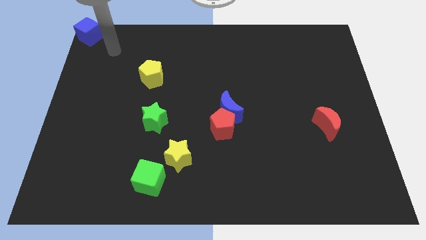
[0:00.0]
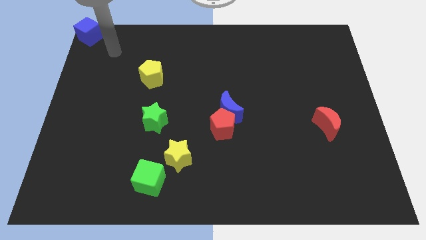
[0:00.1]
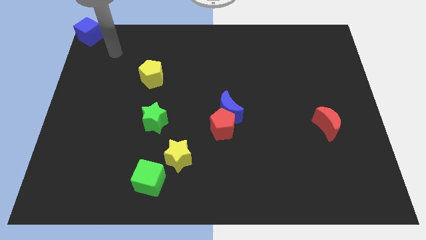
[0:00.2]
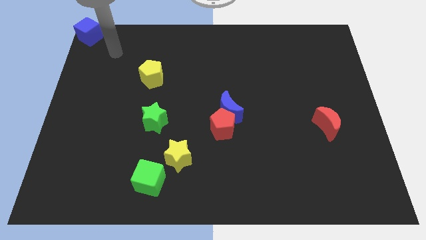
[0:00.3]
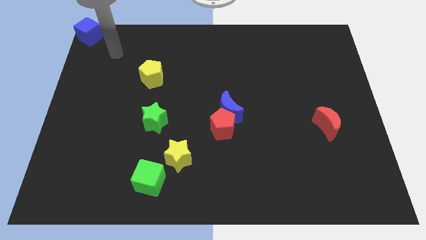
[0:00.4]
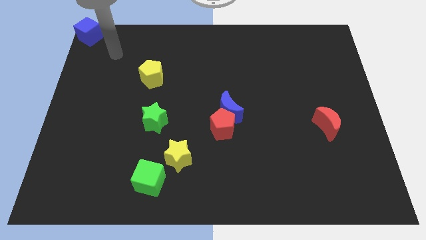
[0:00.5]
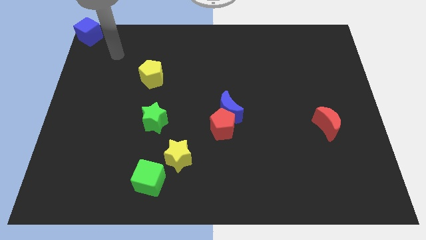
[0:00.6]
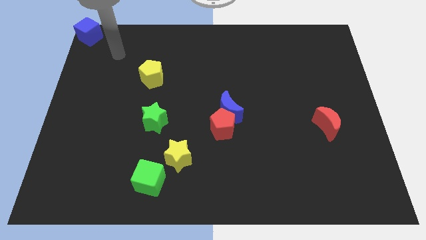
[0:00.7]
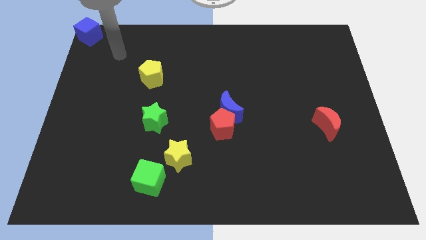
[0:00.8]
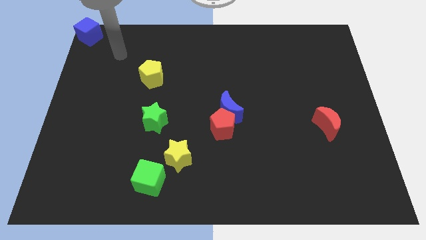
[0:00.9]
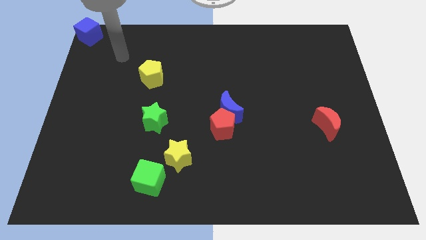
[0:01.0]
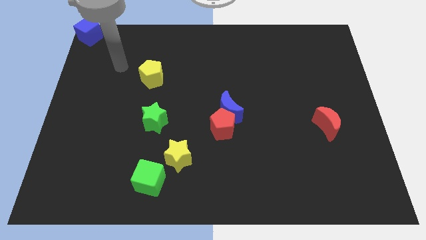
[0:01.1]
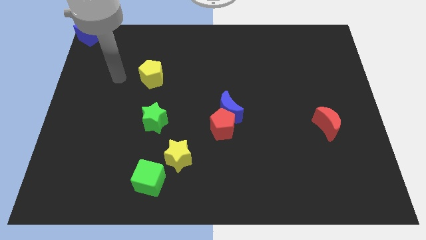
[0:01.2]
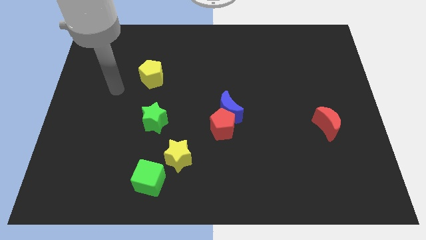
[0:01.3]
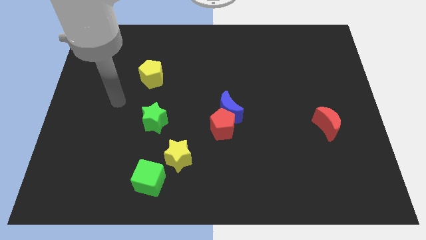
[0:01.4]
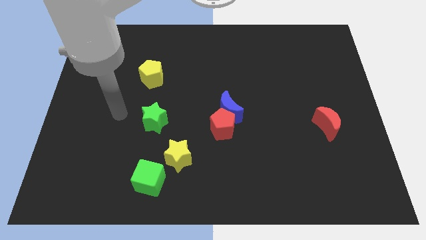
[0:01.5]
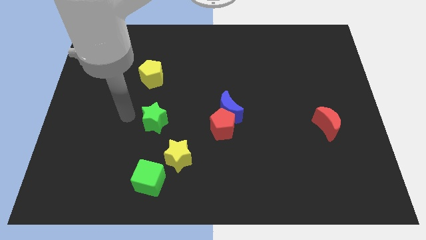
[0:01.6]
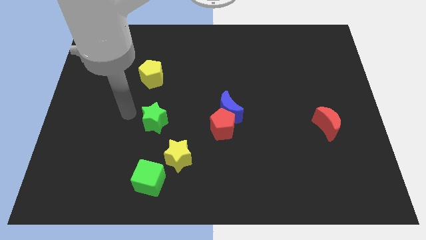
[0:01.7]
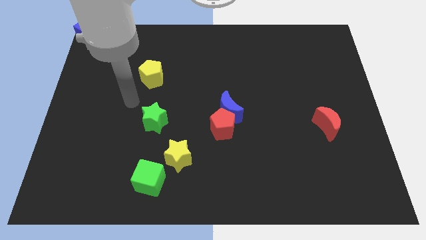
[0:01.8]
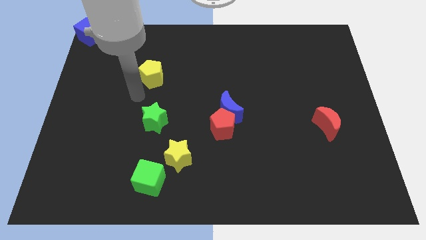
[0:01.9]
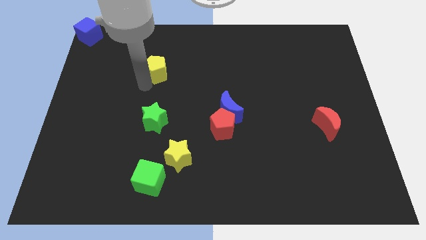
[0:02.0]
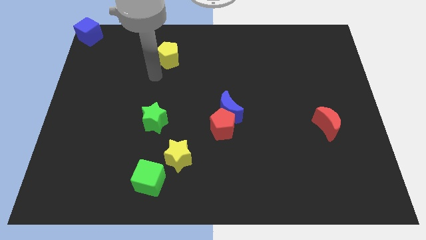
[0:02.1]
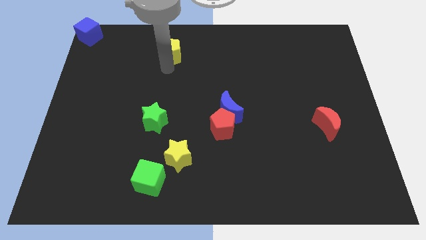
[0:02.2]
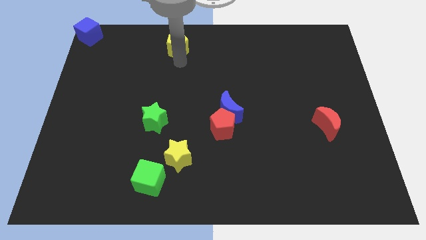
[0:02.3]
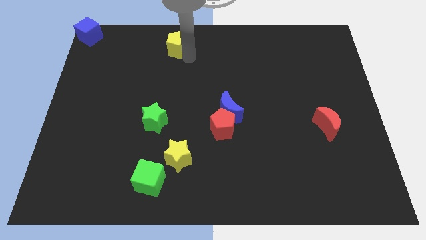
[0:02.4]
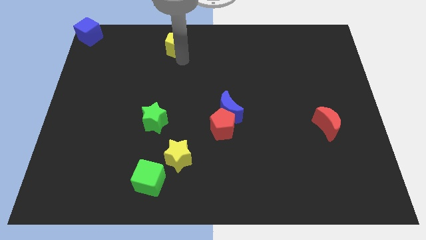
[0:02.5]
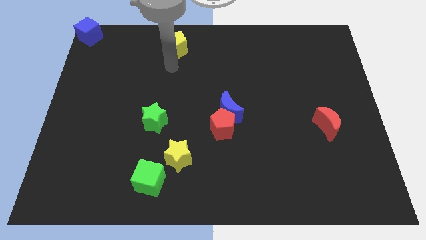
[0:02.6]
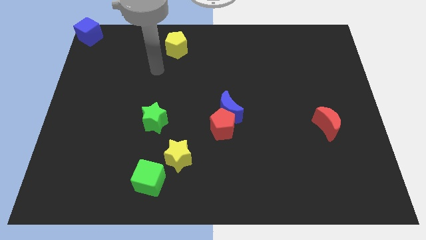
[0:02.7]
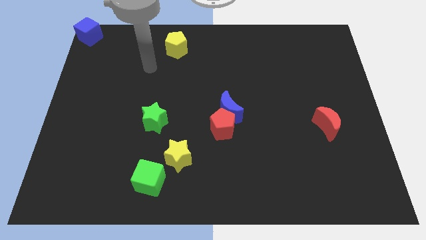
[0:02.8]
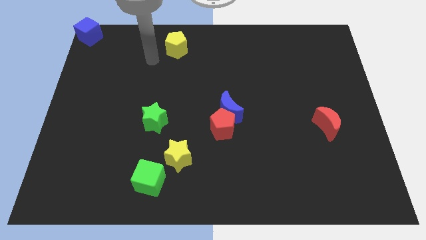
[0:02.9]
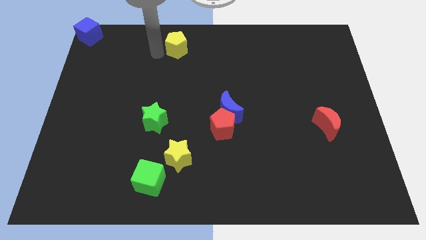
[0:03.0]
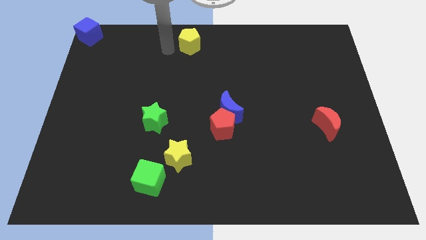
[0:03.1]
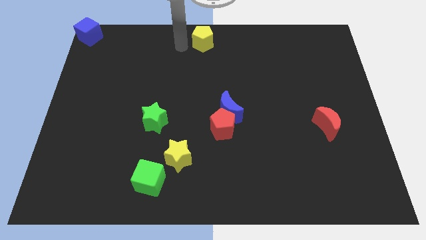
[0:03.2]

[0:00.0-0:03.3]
move the yellow pentagon towards the top center

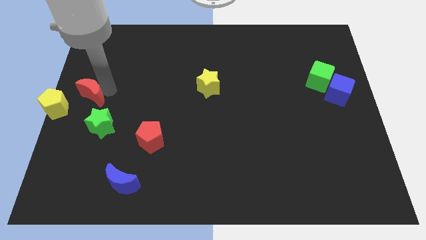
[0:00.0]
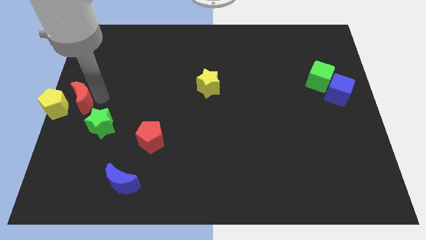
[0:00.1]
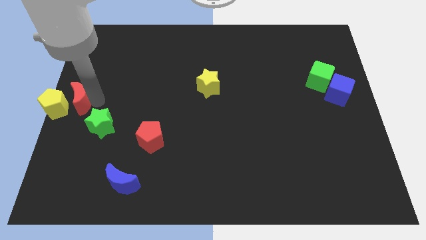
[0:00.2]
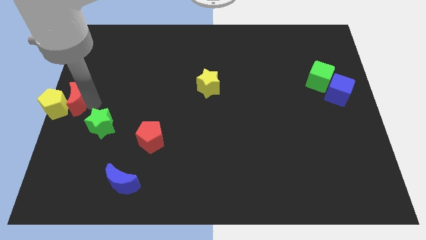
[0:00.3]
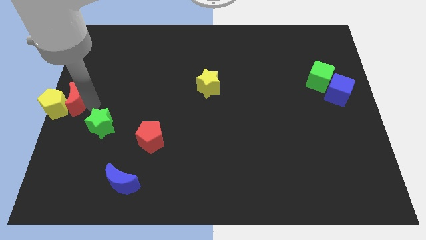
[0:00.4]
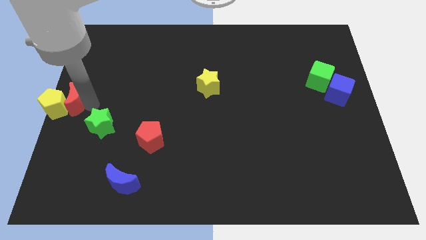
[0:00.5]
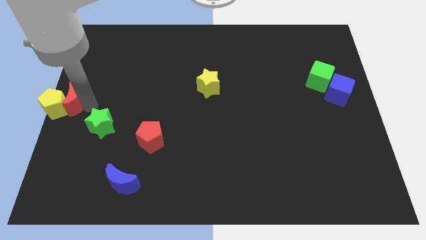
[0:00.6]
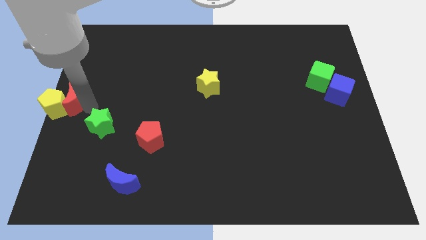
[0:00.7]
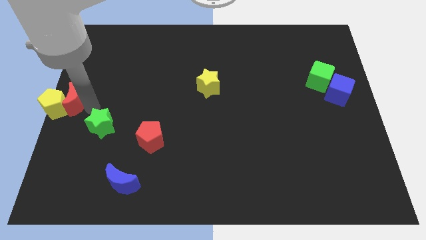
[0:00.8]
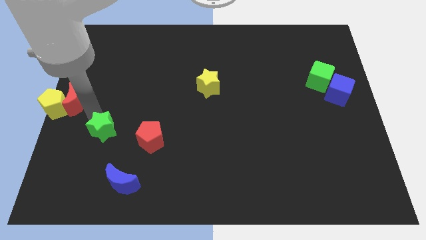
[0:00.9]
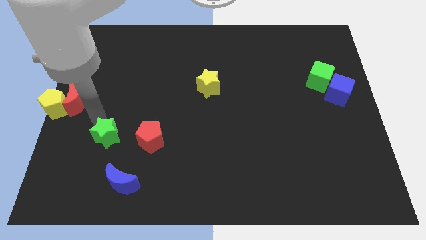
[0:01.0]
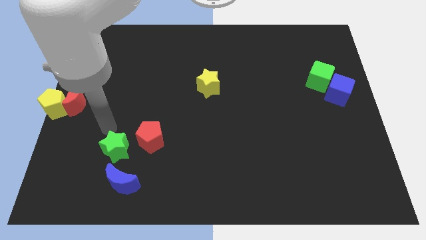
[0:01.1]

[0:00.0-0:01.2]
push red crescent into the left center of the board

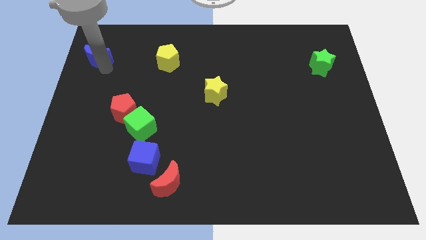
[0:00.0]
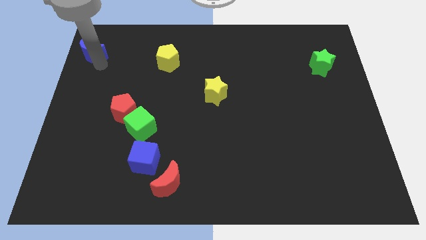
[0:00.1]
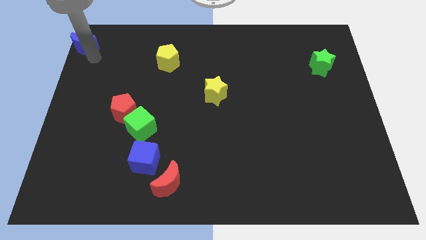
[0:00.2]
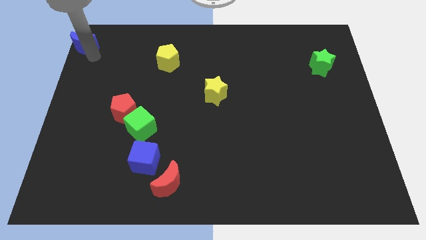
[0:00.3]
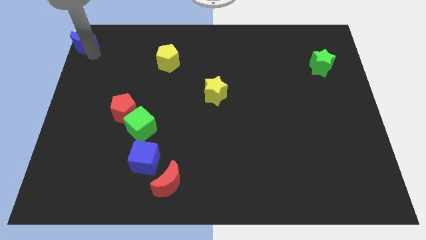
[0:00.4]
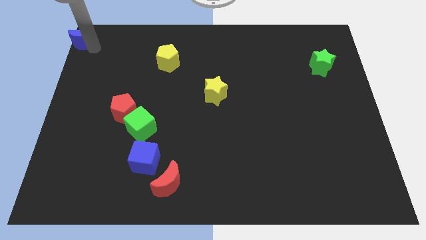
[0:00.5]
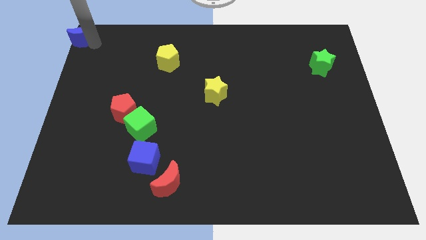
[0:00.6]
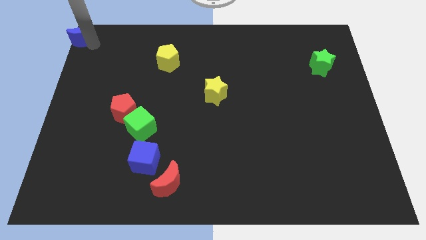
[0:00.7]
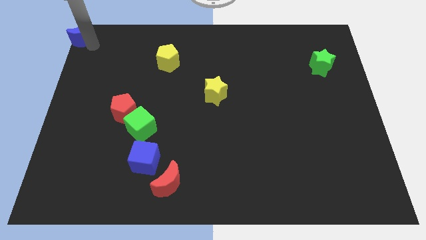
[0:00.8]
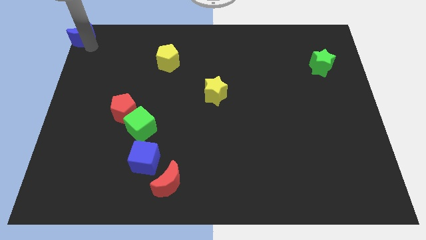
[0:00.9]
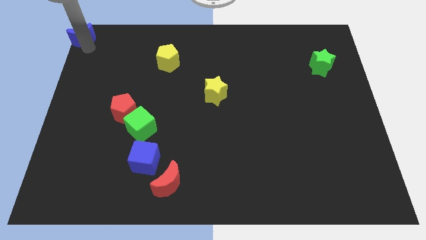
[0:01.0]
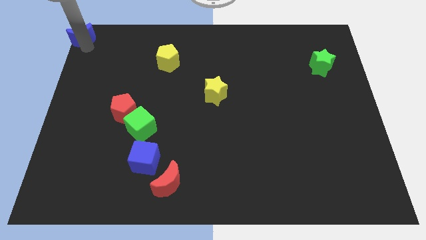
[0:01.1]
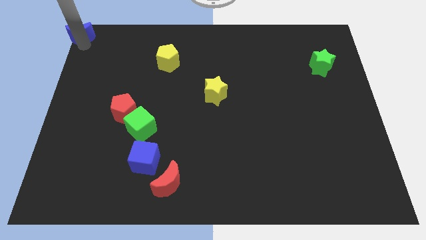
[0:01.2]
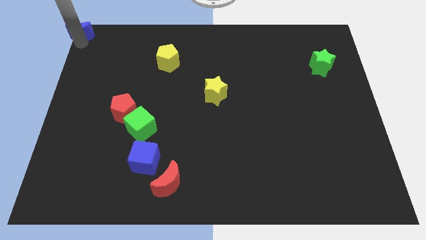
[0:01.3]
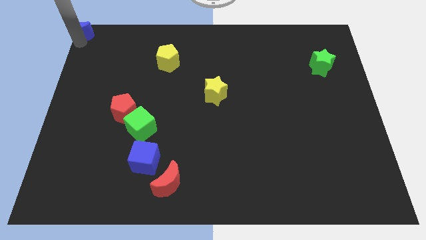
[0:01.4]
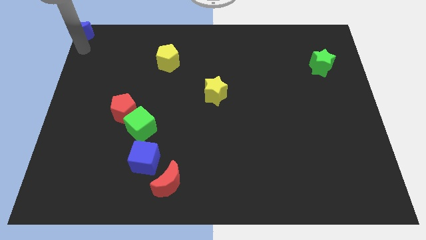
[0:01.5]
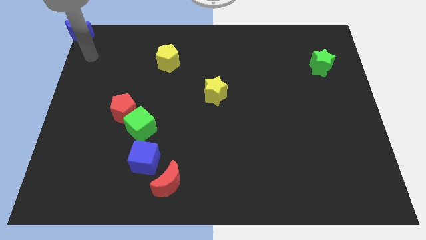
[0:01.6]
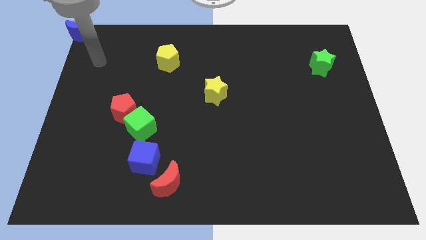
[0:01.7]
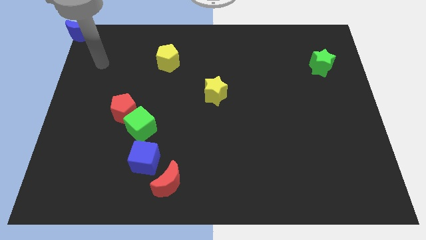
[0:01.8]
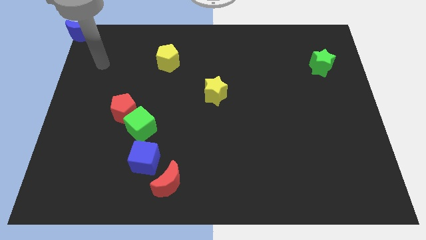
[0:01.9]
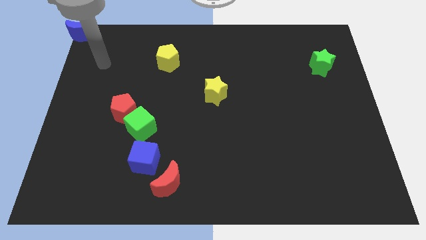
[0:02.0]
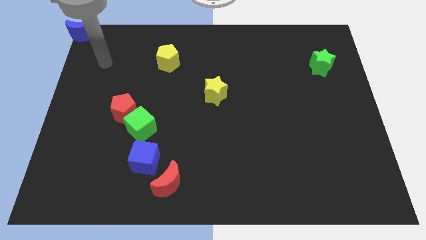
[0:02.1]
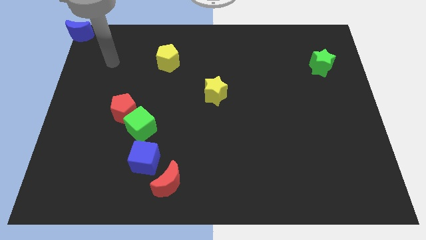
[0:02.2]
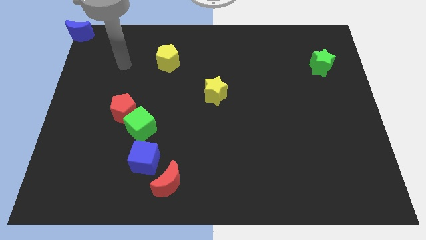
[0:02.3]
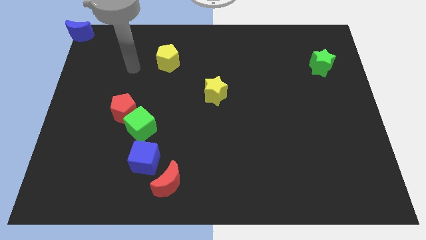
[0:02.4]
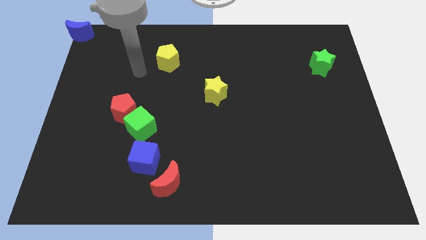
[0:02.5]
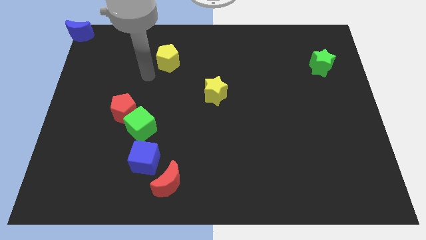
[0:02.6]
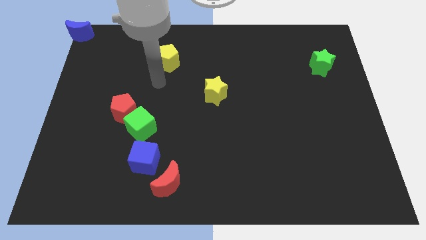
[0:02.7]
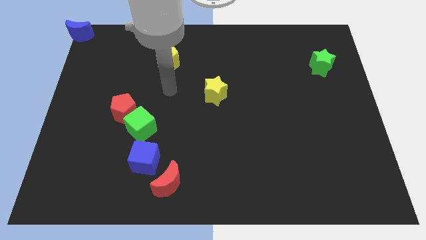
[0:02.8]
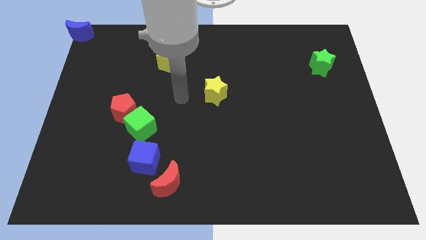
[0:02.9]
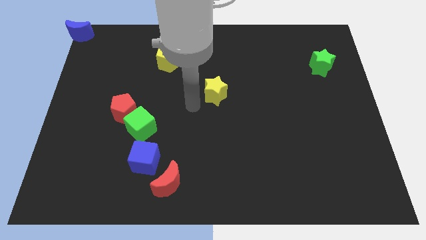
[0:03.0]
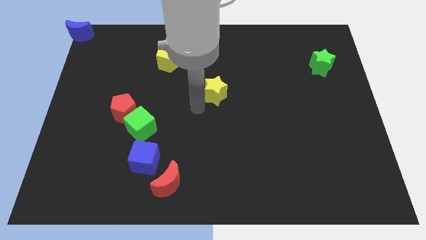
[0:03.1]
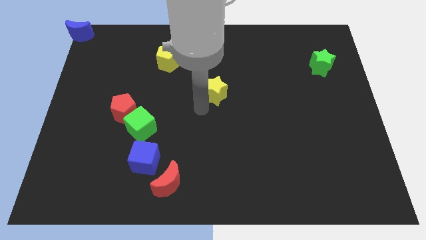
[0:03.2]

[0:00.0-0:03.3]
place the blue moon to the top left corner of the board

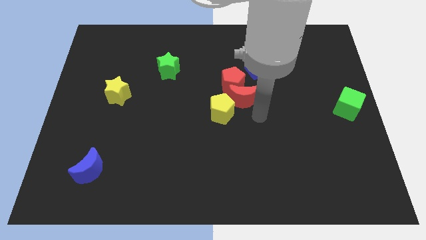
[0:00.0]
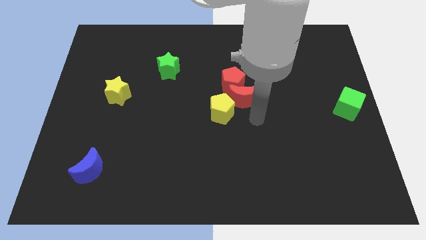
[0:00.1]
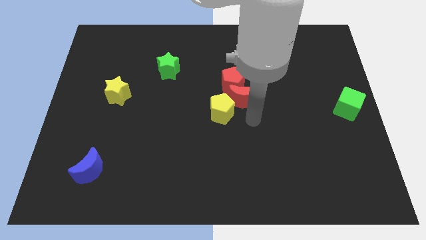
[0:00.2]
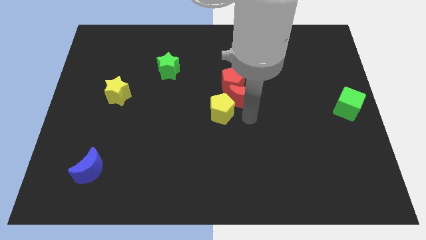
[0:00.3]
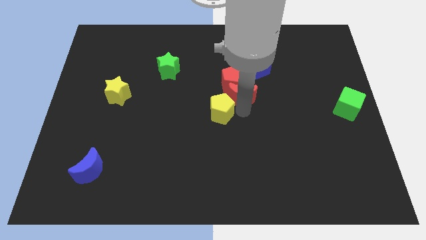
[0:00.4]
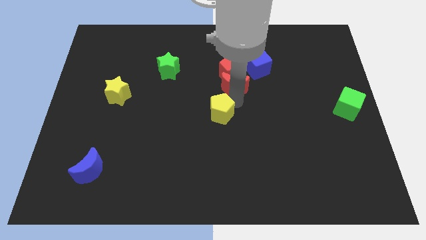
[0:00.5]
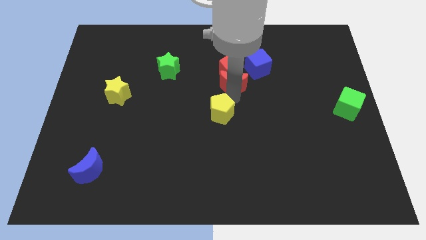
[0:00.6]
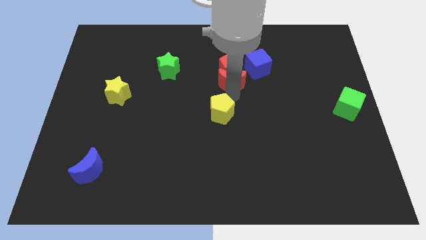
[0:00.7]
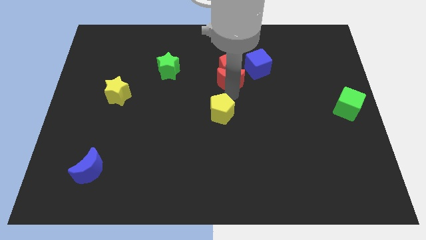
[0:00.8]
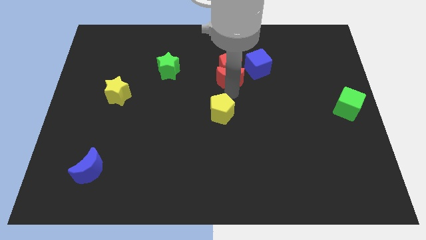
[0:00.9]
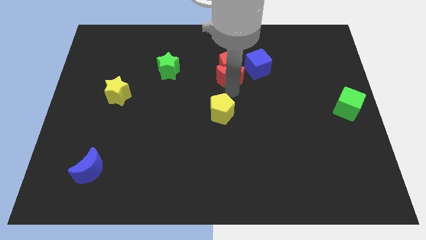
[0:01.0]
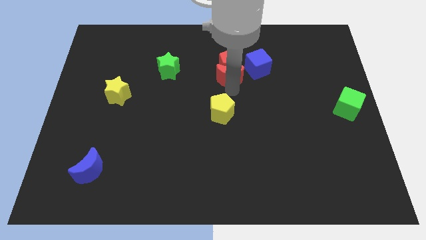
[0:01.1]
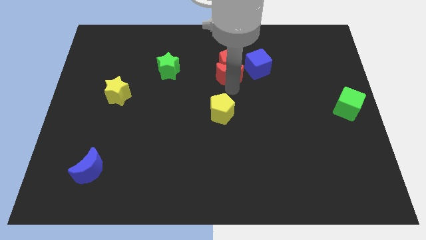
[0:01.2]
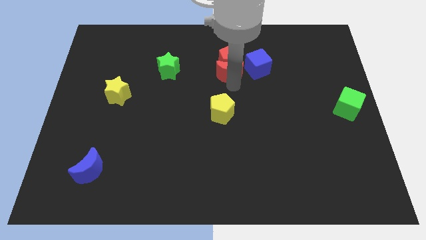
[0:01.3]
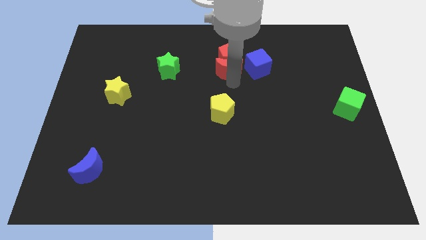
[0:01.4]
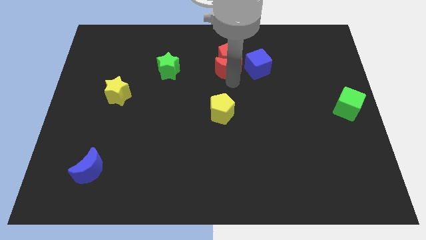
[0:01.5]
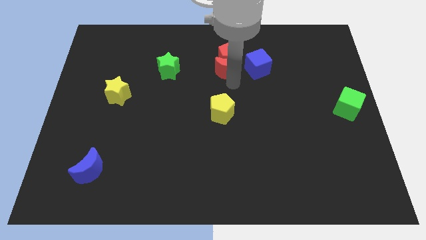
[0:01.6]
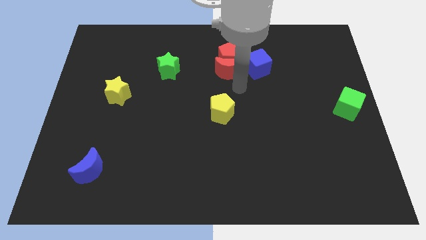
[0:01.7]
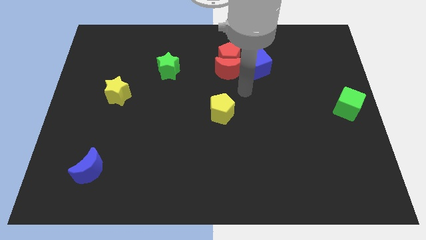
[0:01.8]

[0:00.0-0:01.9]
move the red crescent with red pentagon to the top center
